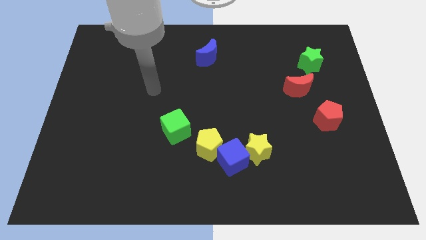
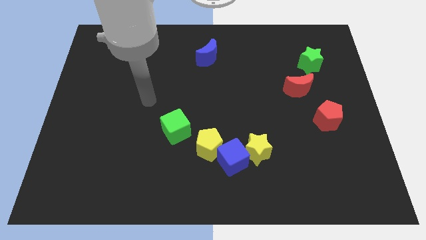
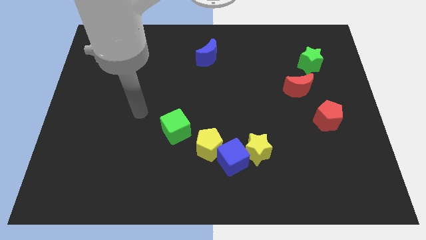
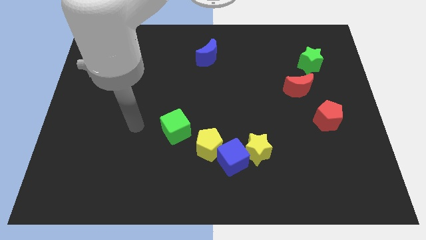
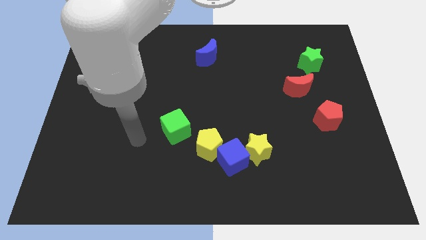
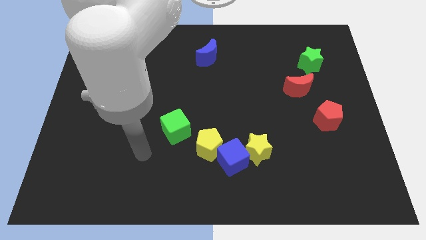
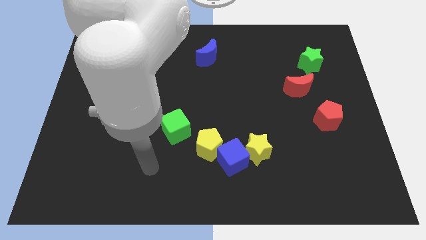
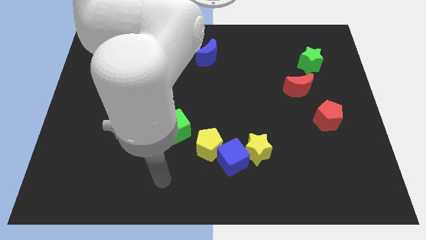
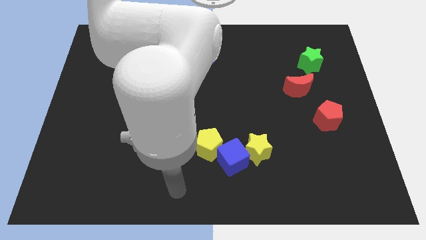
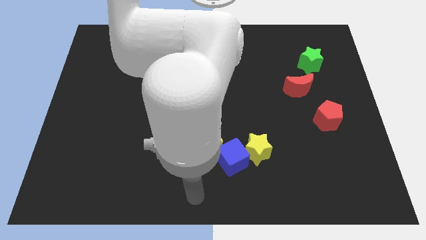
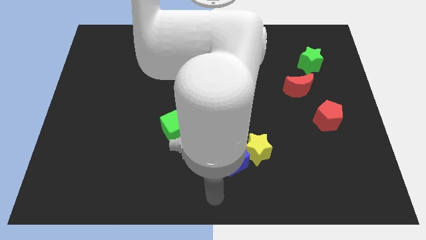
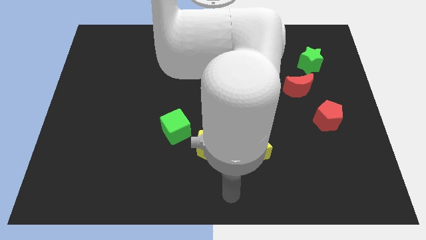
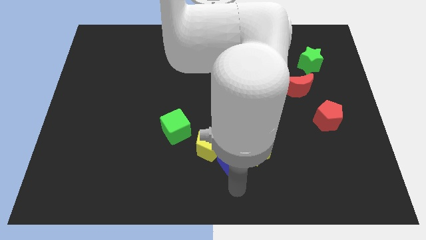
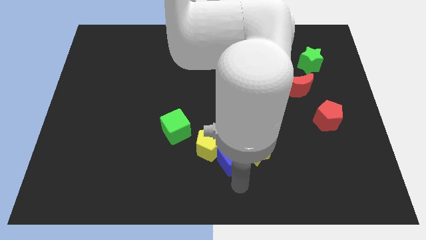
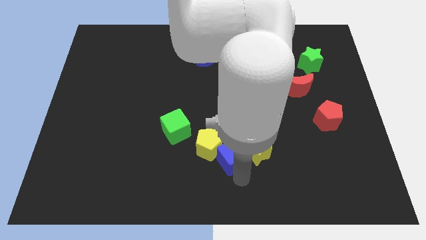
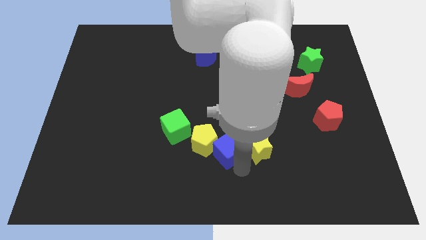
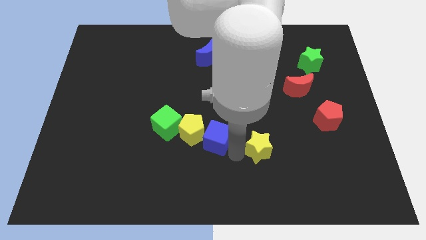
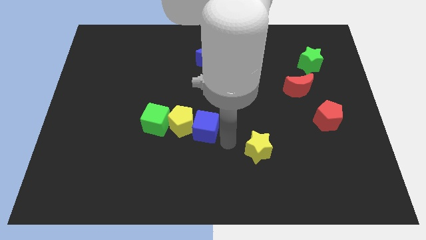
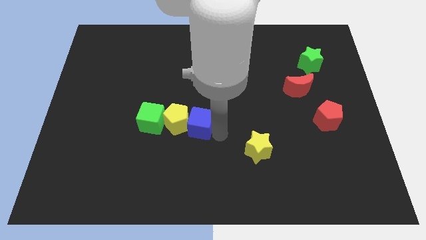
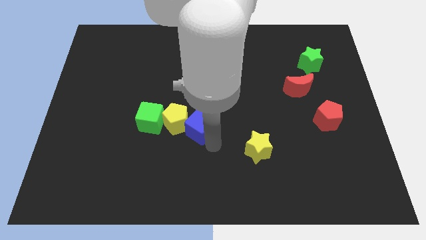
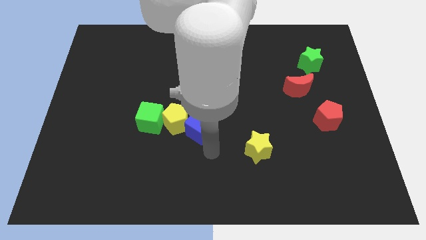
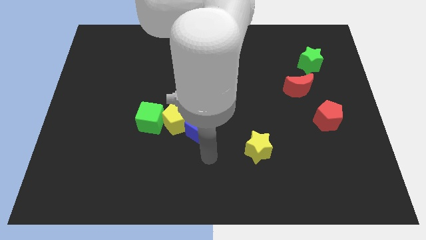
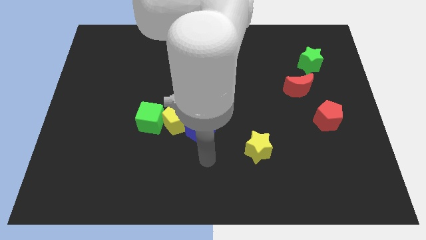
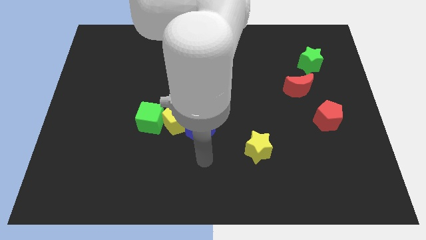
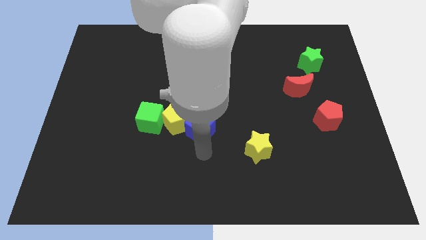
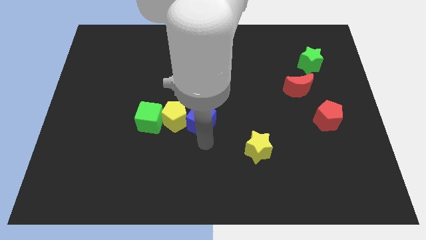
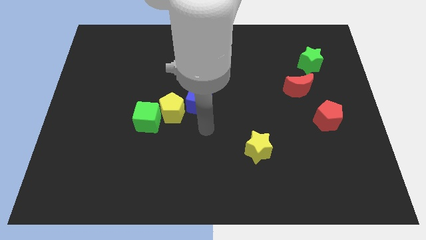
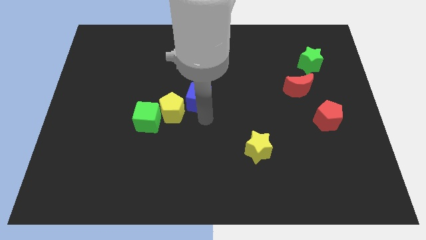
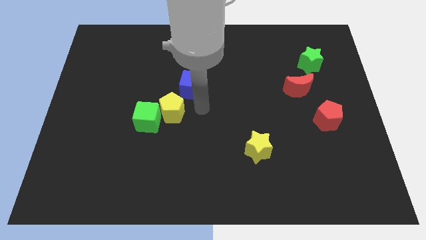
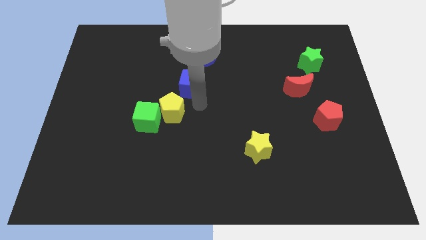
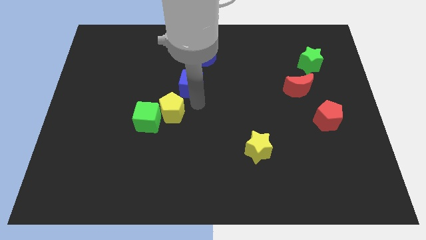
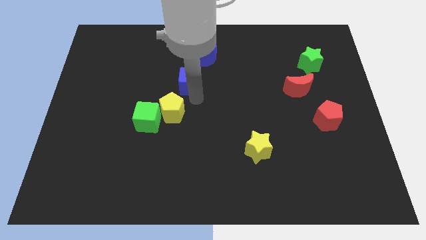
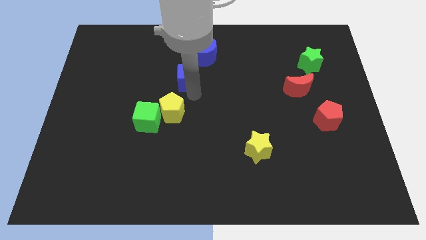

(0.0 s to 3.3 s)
push the blue cube in between the yellow pentagon and blue moon

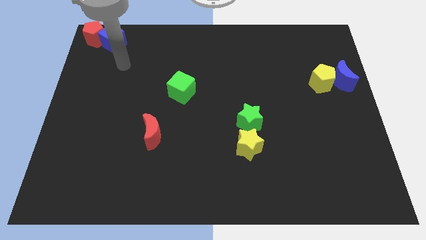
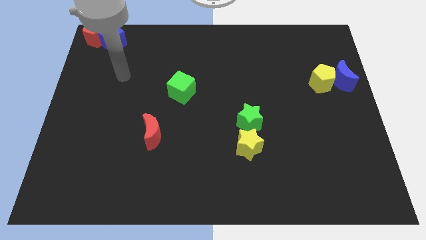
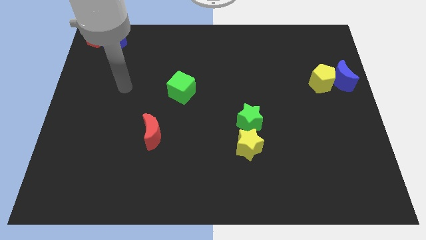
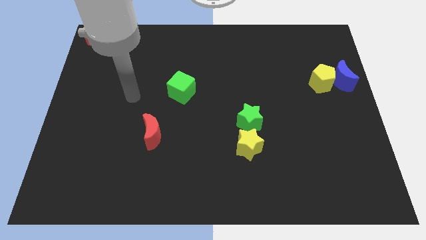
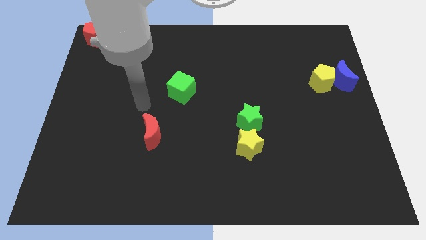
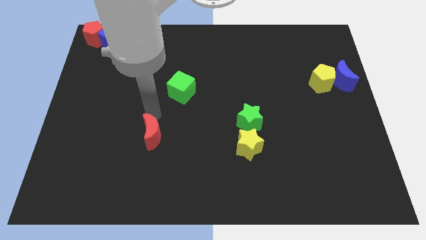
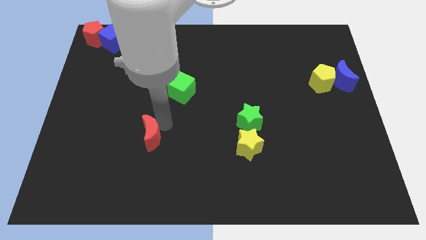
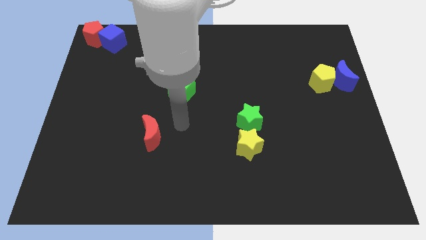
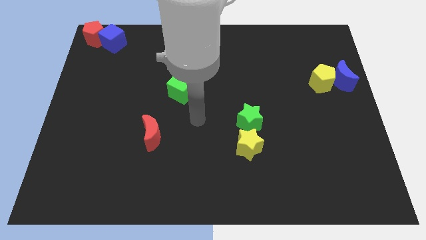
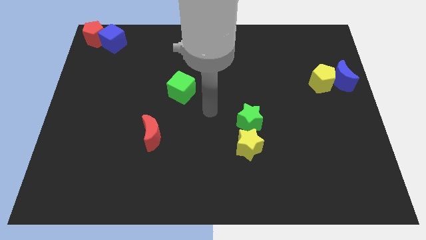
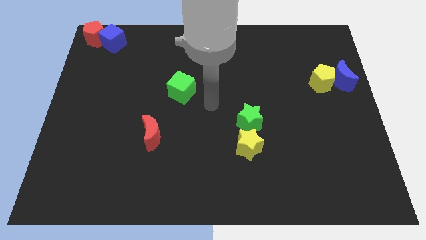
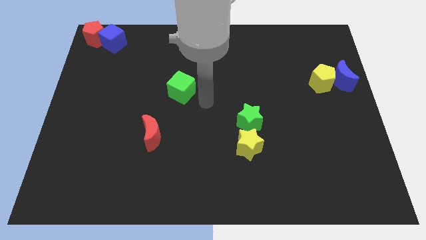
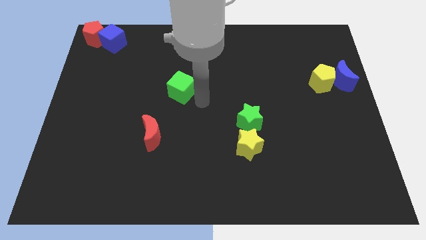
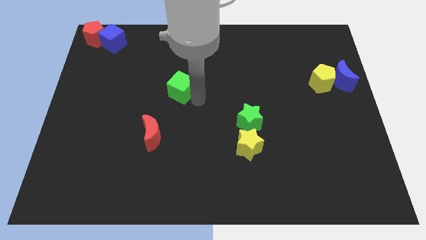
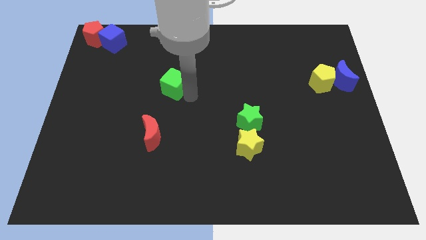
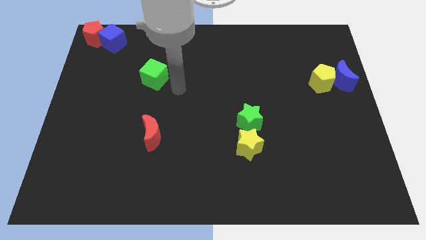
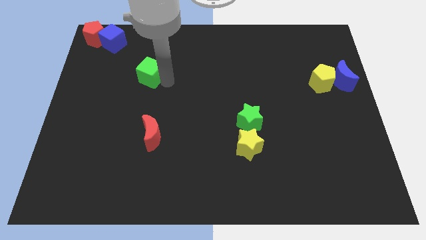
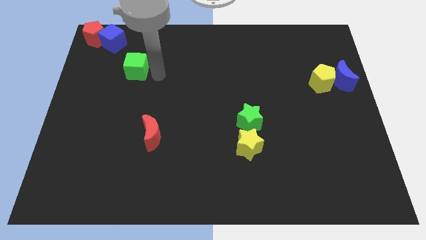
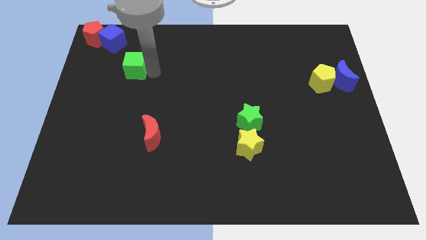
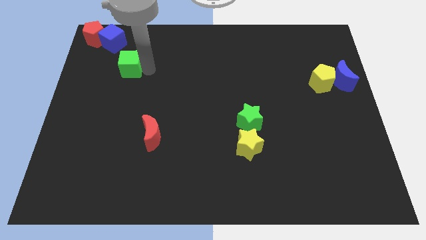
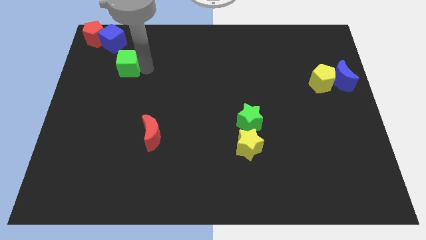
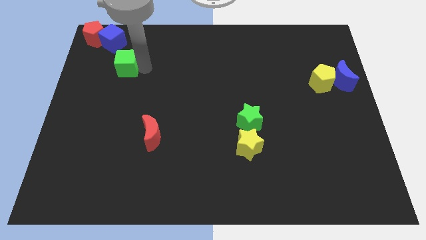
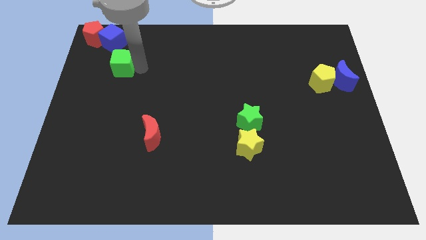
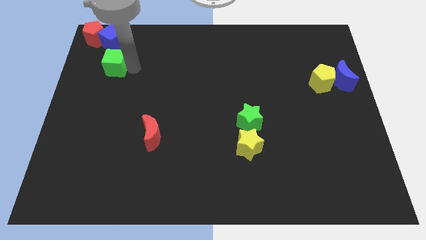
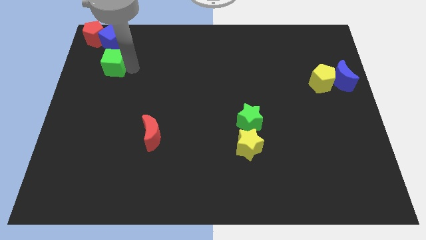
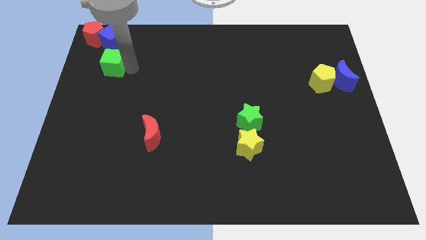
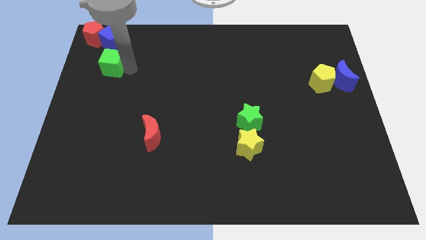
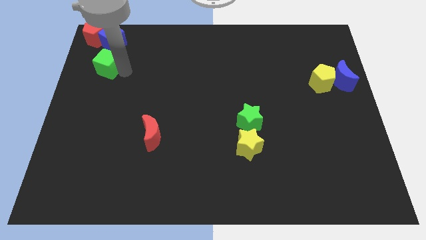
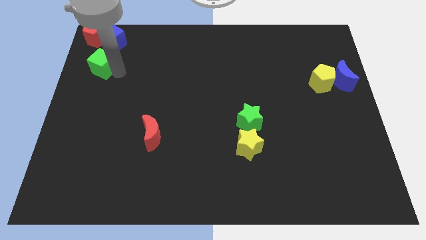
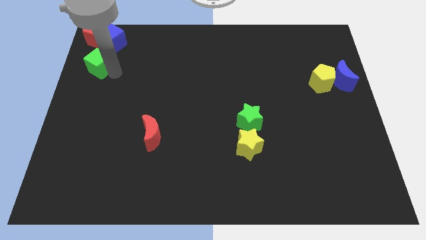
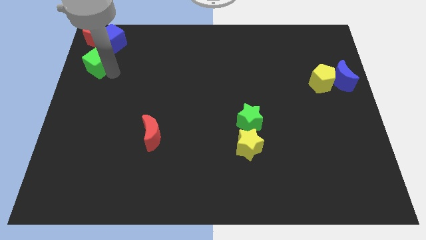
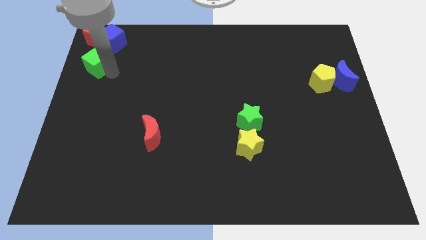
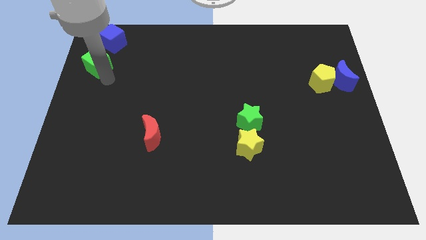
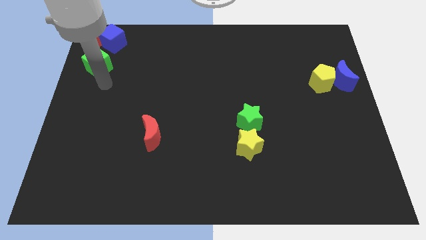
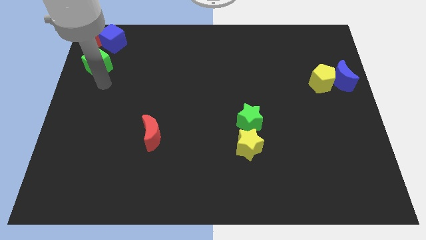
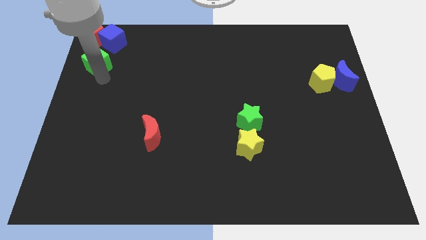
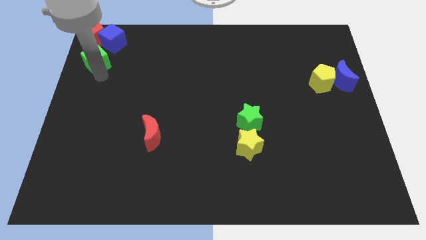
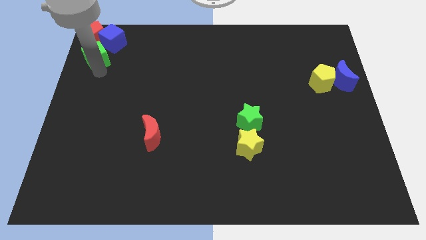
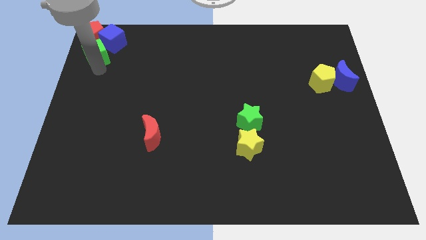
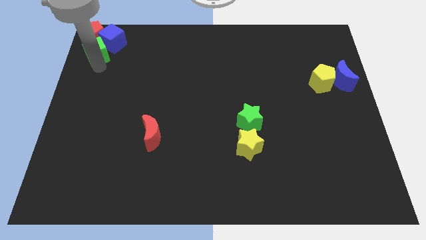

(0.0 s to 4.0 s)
move the green cube to the top left corner of the board

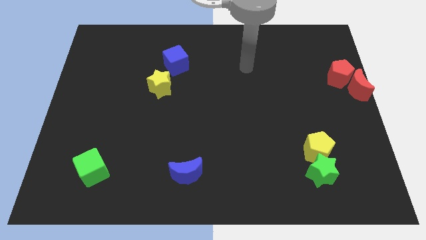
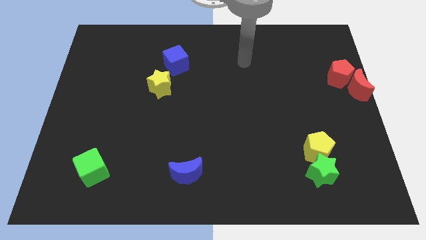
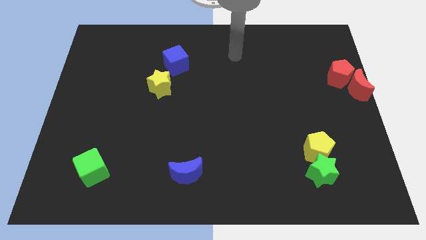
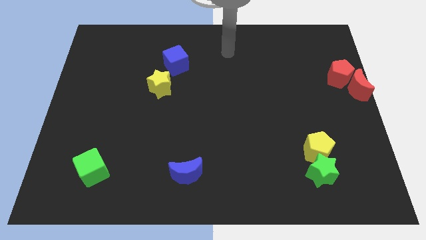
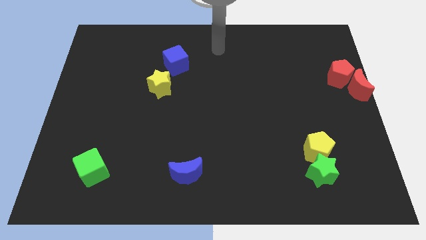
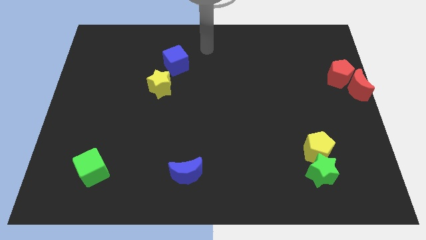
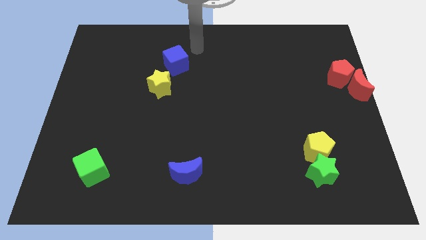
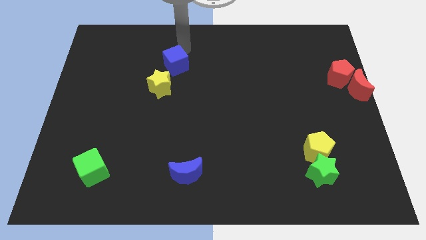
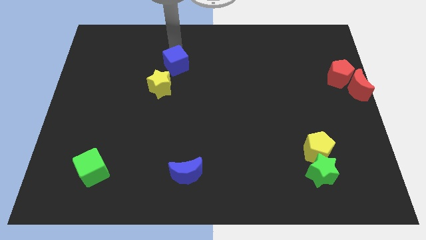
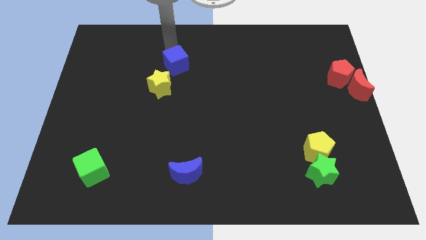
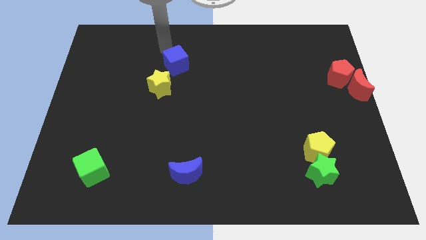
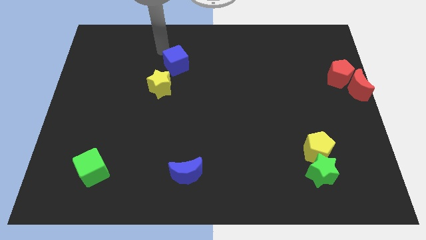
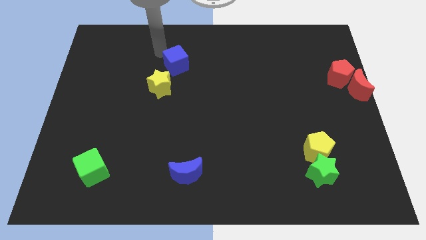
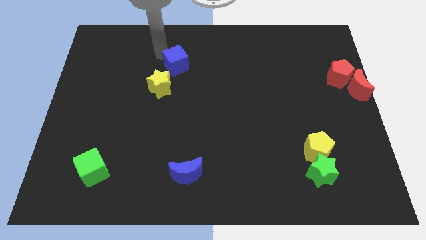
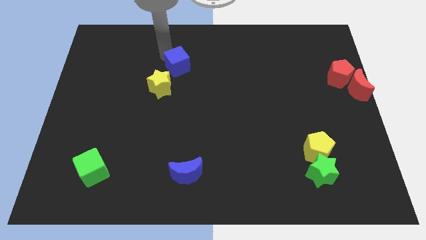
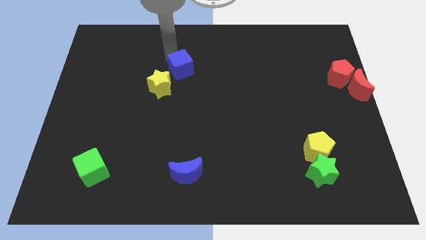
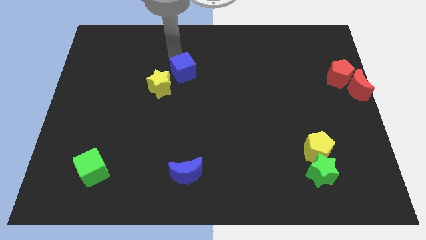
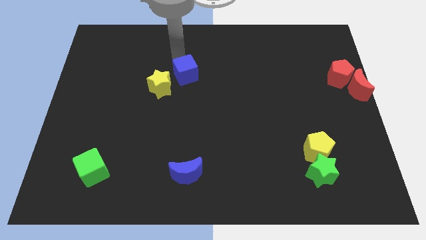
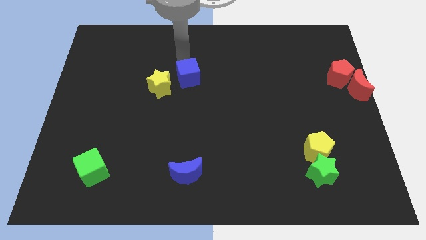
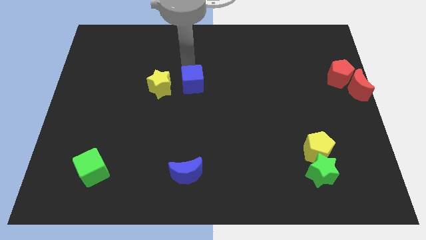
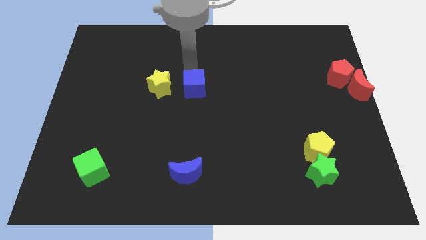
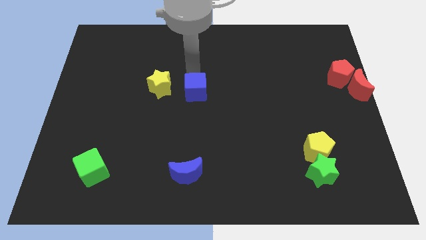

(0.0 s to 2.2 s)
place blue cube to the right of the yellow star
